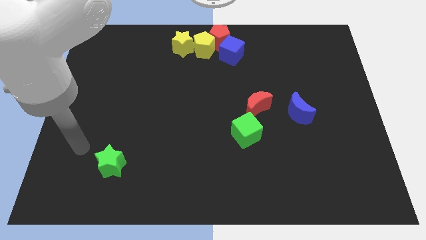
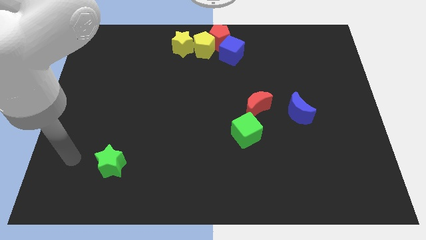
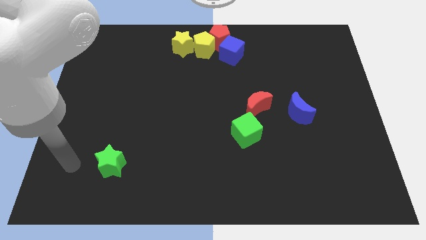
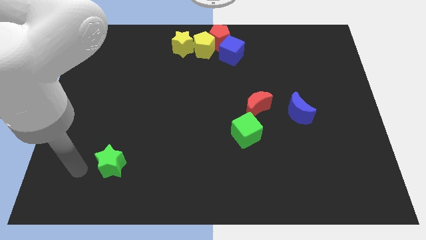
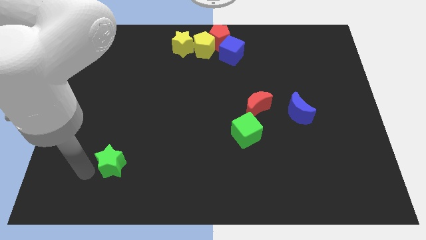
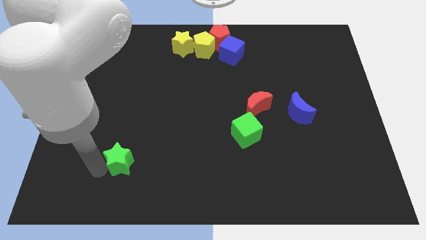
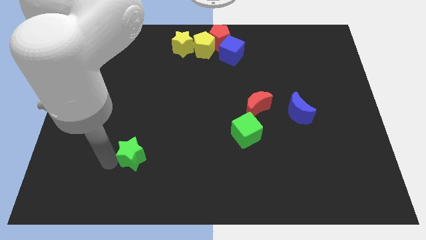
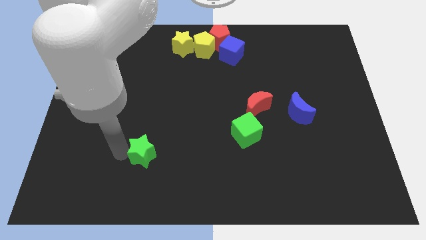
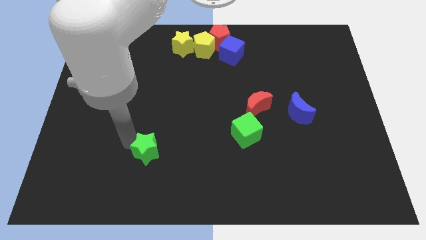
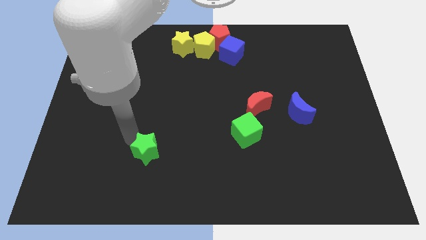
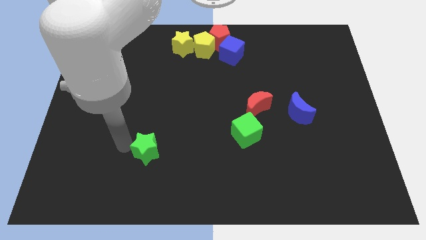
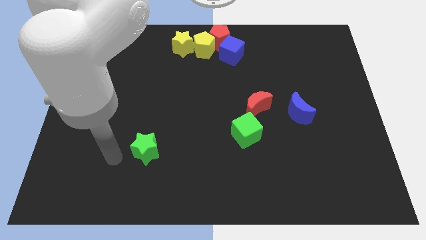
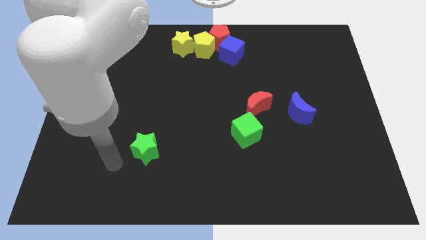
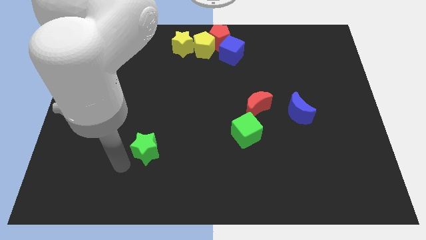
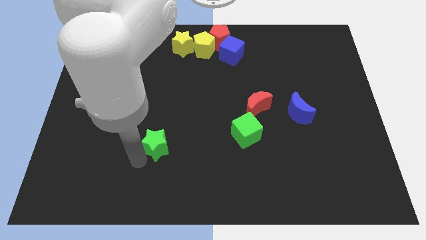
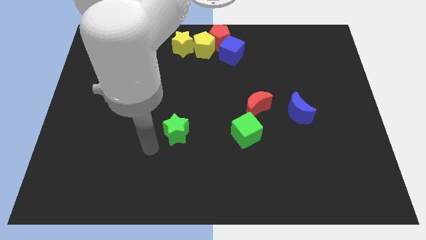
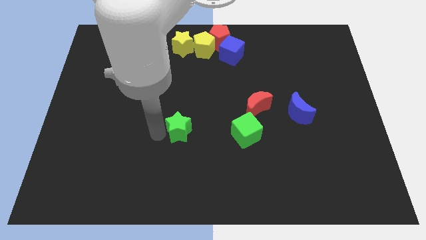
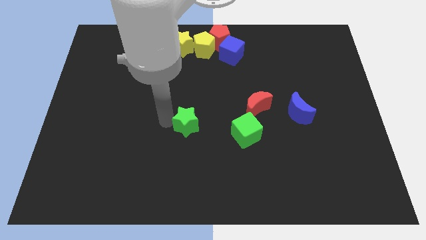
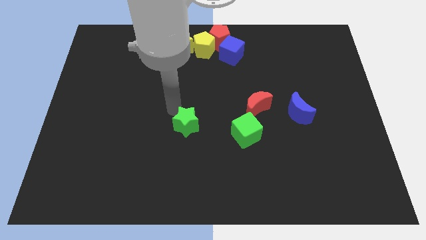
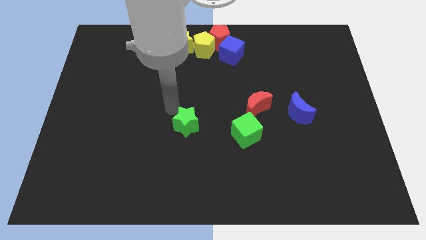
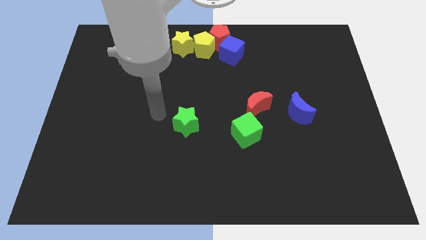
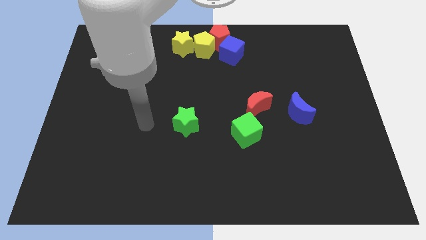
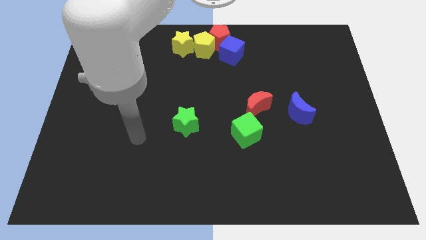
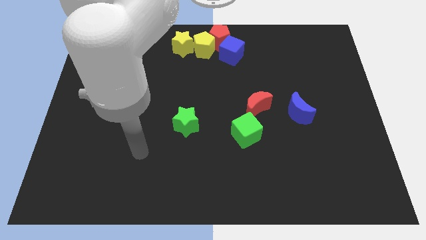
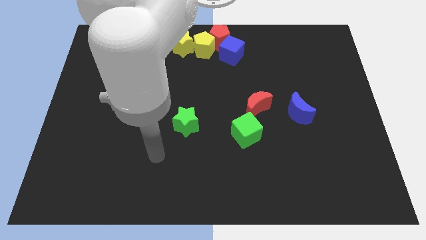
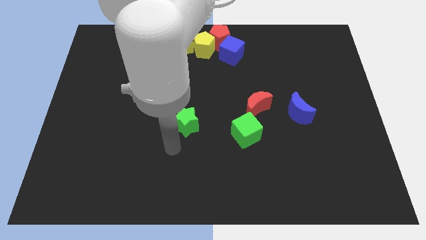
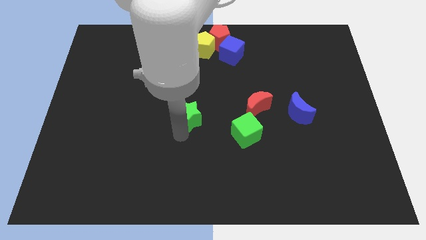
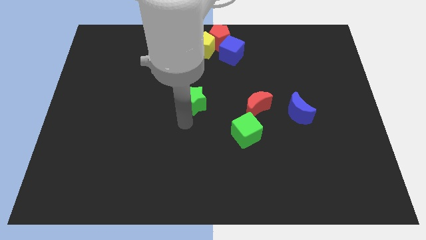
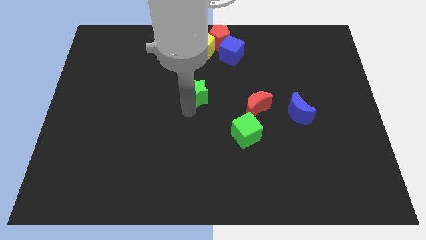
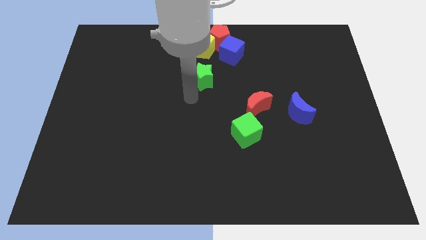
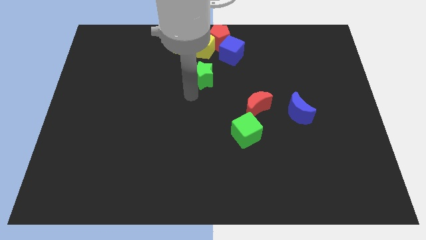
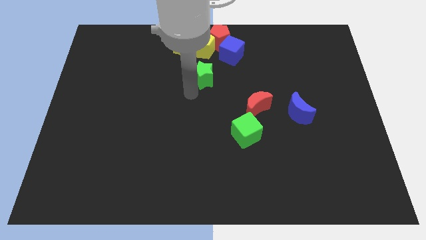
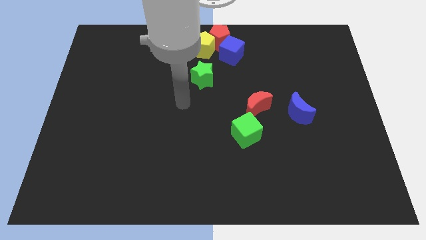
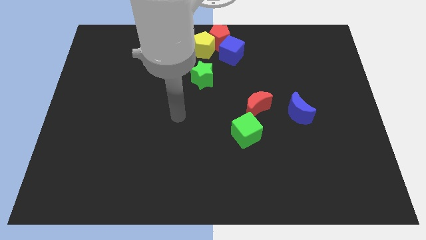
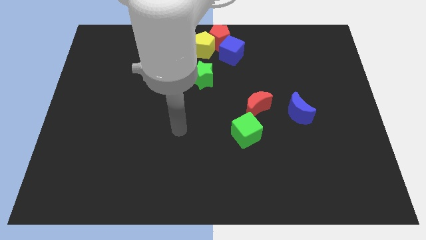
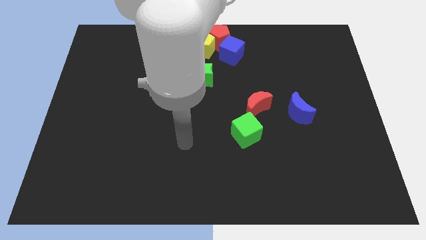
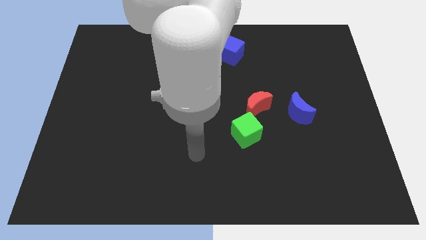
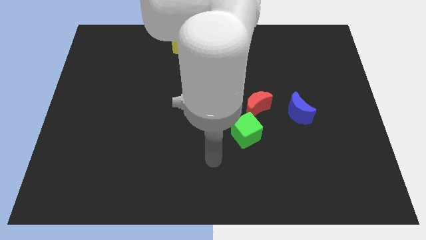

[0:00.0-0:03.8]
place the green star below the yellow pentagon

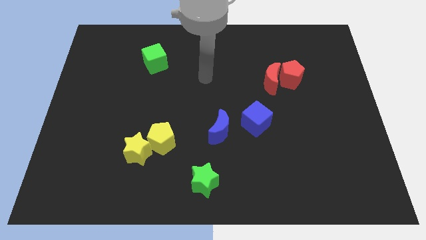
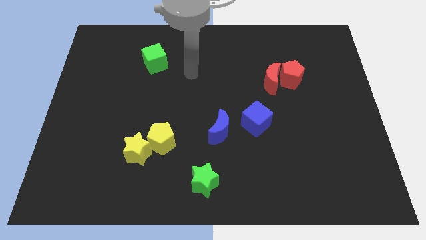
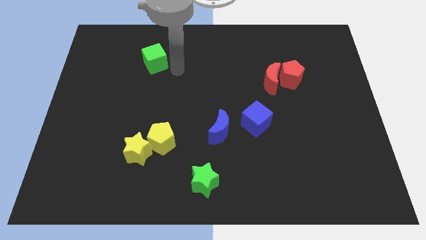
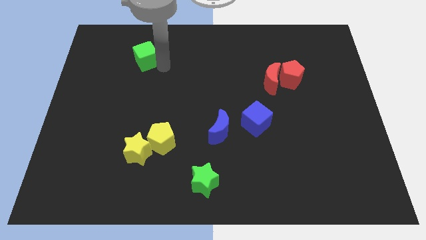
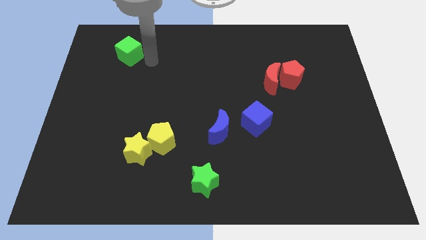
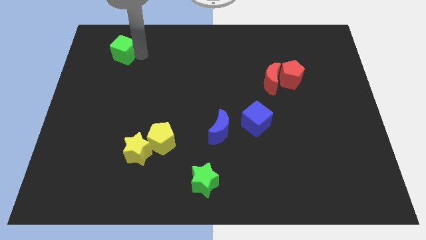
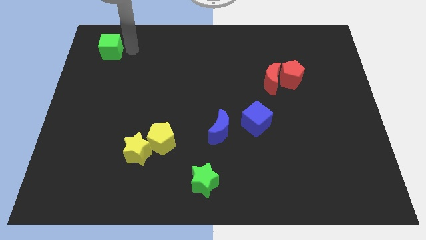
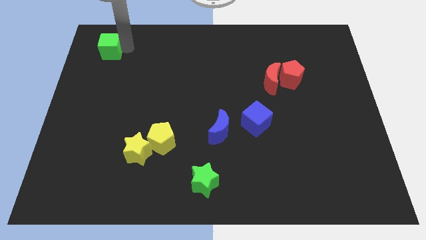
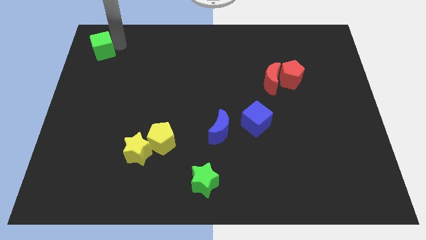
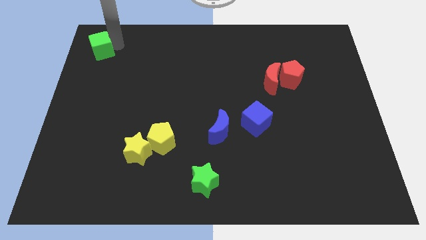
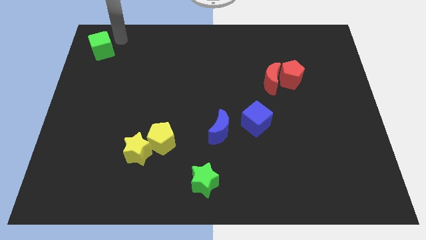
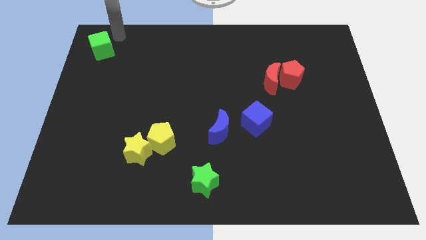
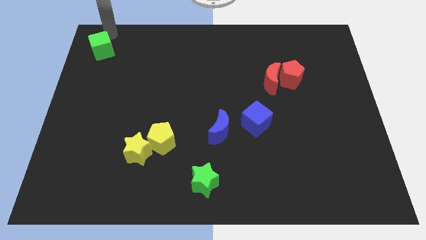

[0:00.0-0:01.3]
push the green cube towards the top left

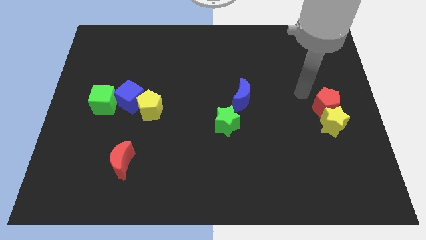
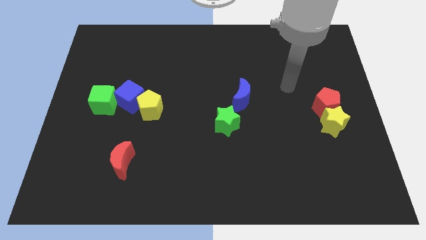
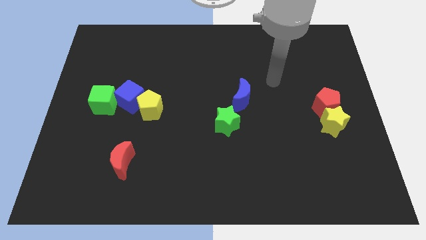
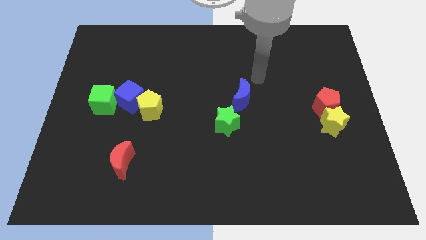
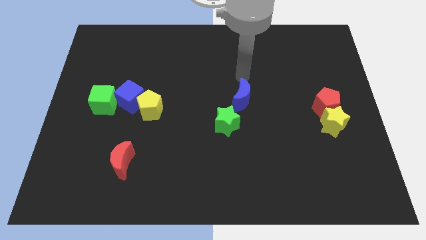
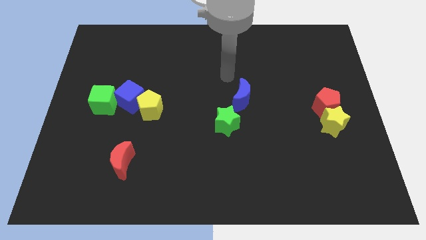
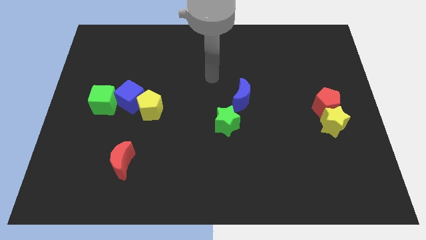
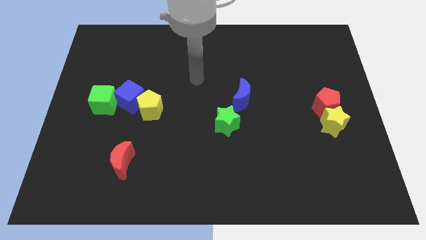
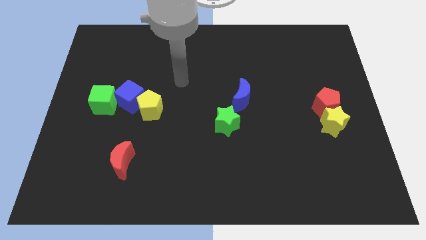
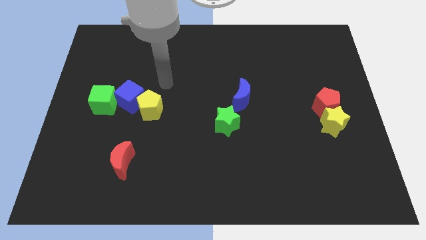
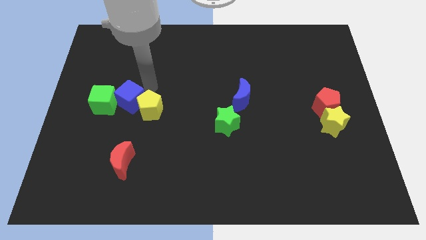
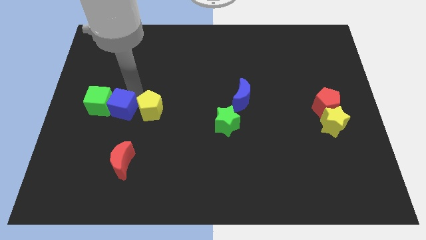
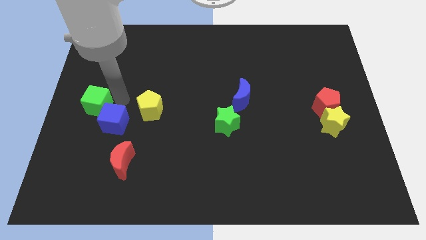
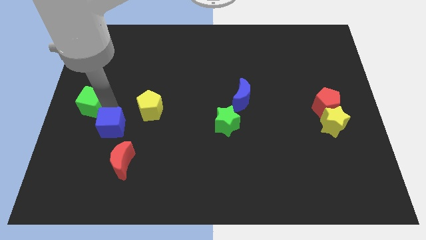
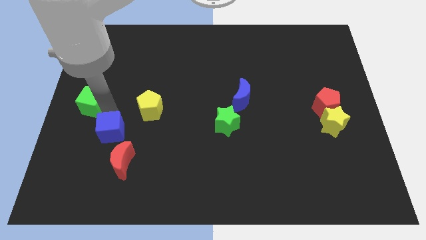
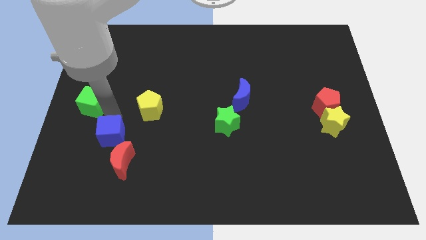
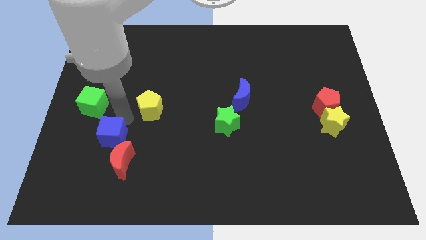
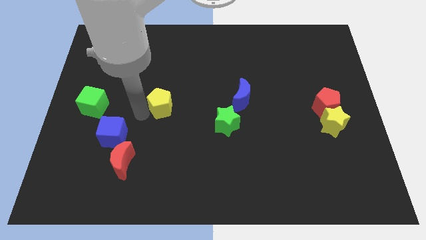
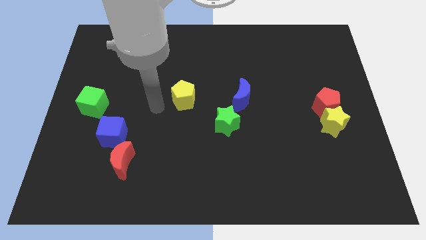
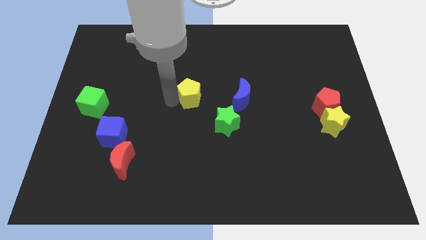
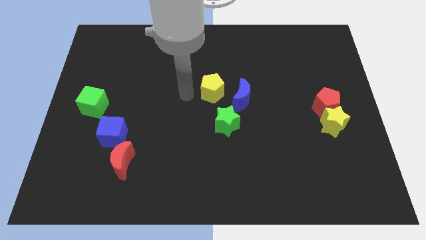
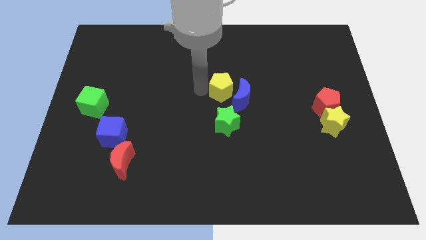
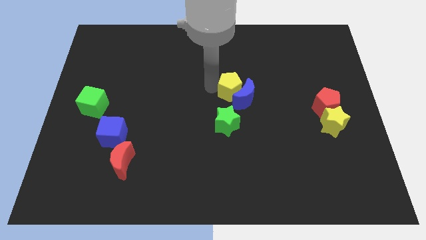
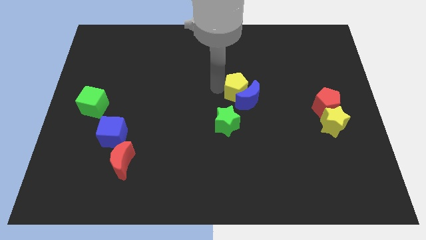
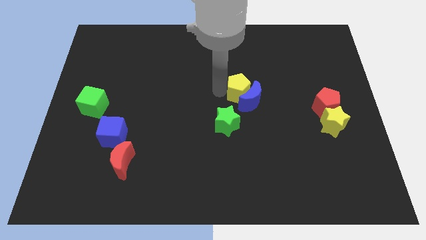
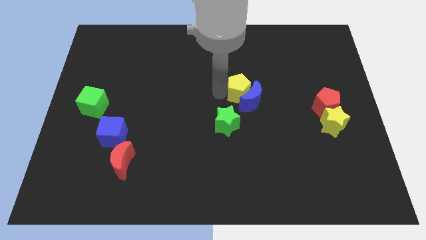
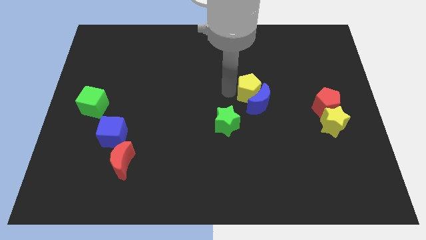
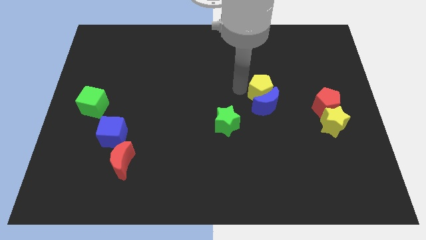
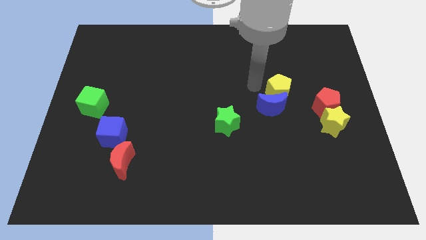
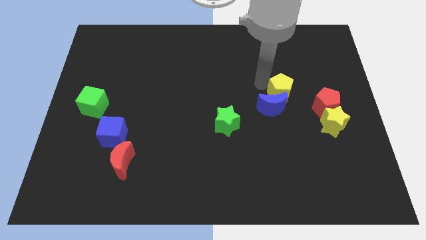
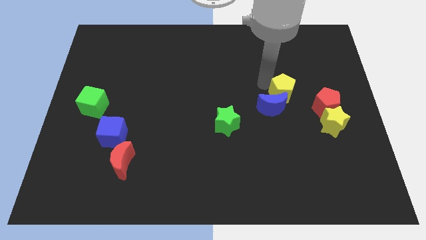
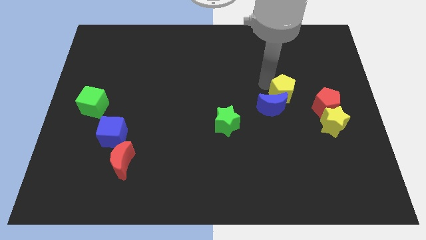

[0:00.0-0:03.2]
move the yellow pentagon to the top of the blue moon

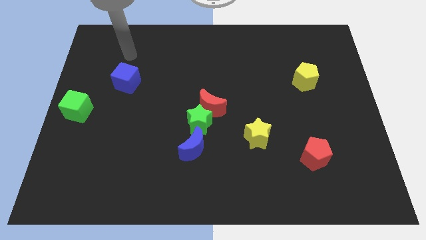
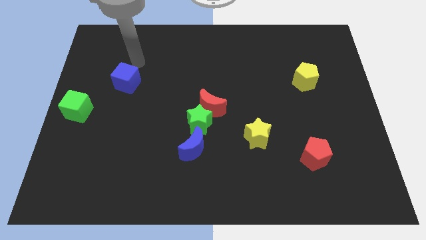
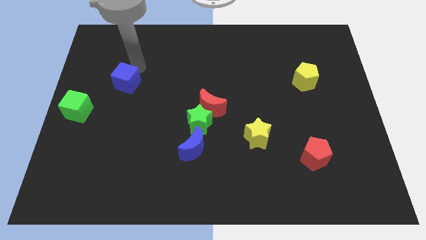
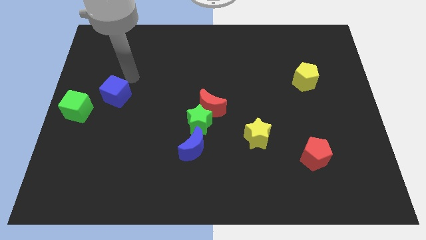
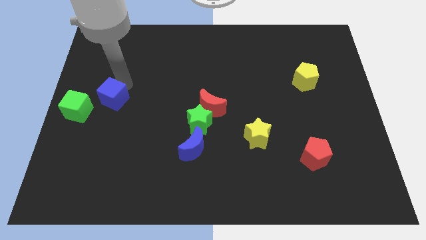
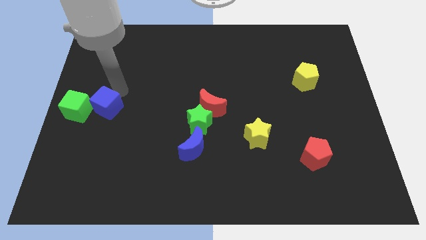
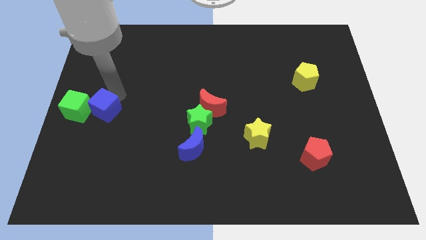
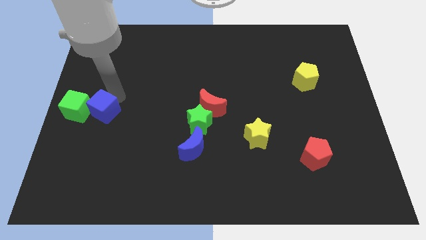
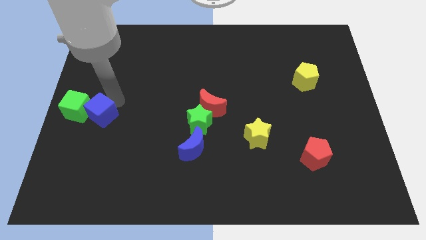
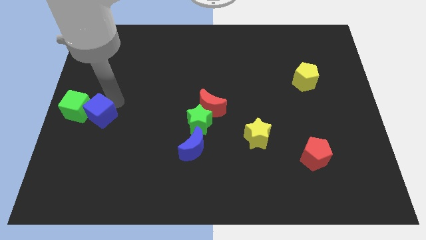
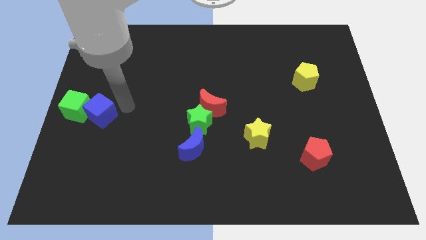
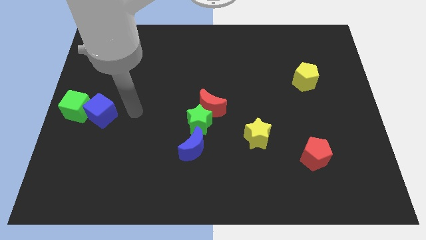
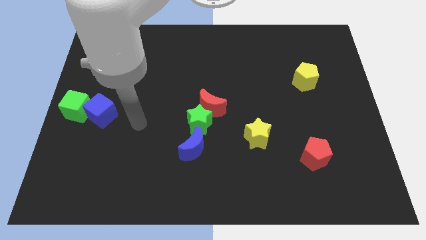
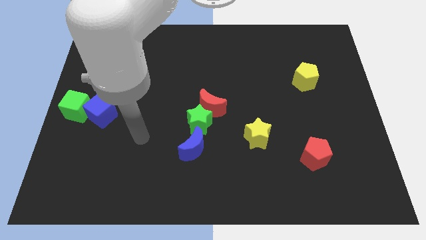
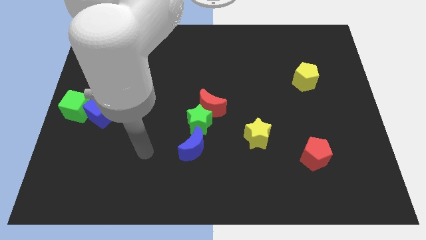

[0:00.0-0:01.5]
move the blue cube to the right side of the green cube
